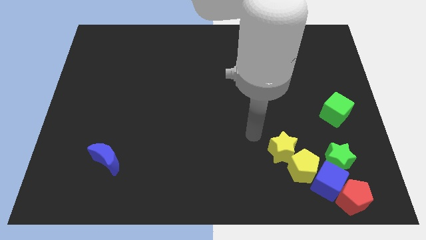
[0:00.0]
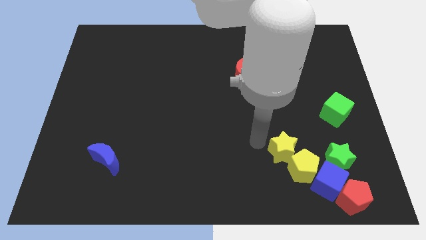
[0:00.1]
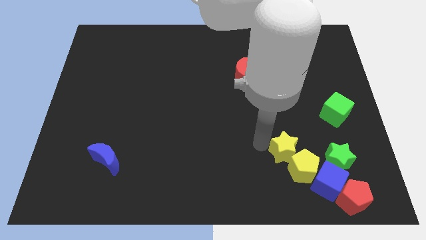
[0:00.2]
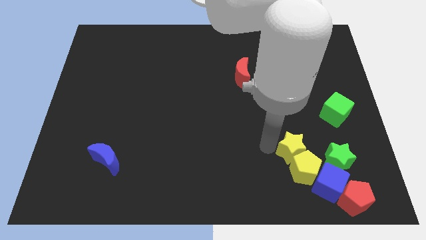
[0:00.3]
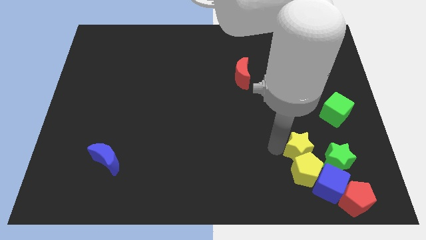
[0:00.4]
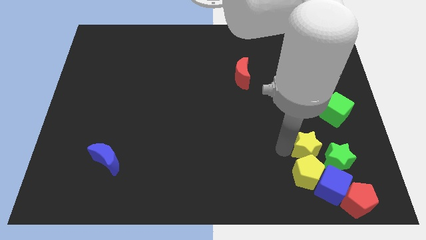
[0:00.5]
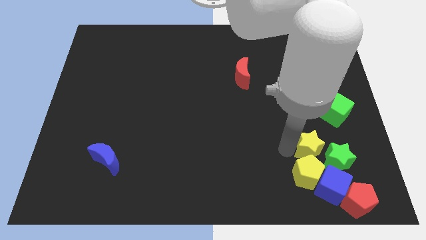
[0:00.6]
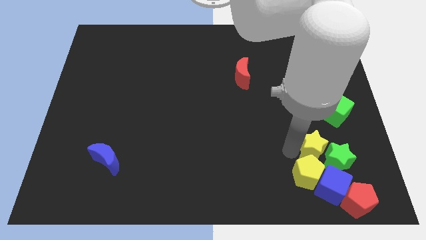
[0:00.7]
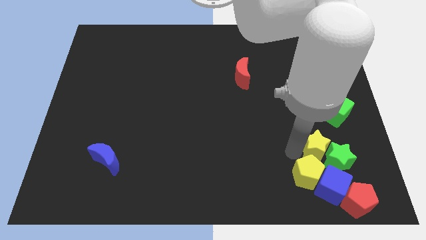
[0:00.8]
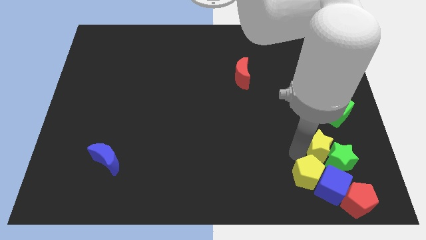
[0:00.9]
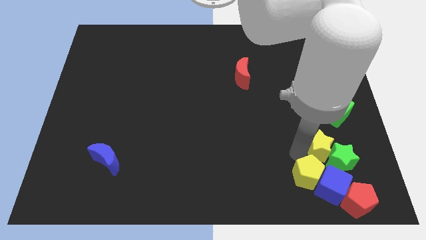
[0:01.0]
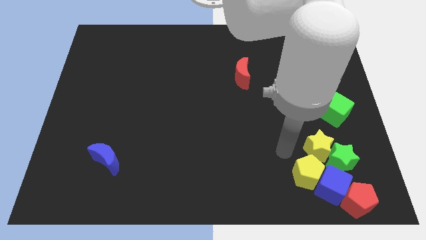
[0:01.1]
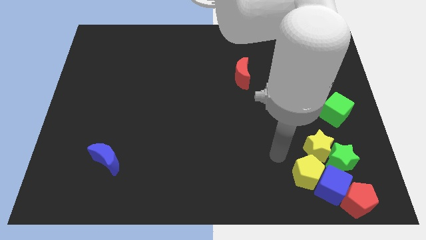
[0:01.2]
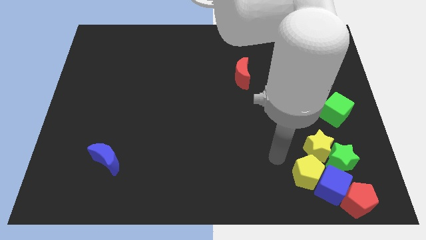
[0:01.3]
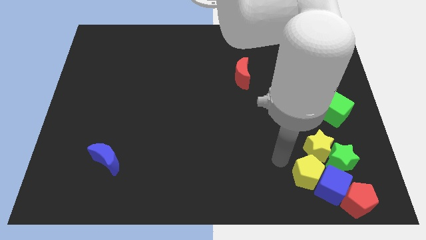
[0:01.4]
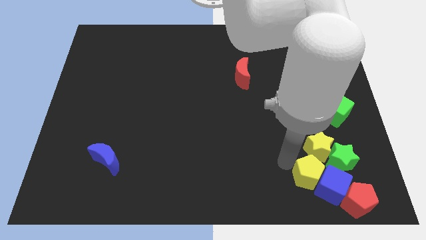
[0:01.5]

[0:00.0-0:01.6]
move the yellow star diagonally above to the green star

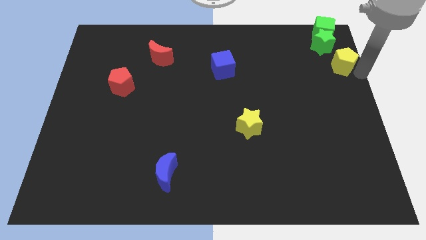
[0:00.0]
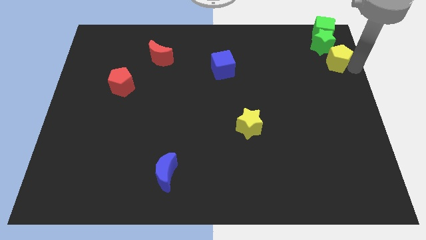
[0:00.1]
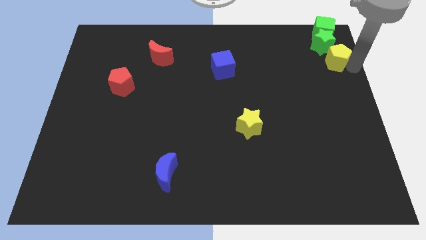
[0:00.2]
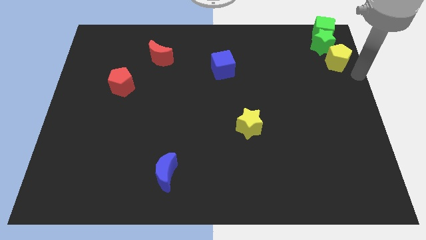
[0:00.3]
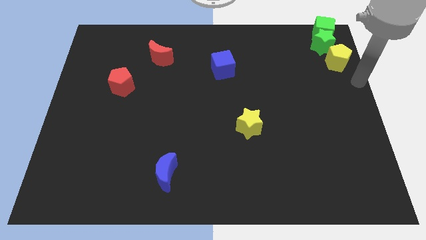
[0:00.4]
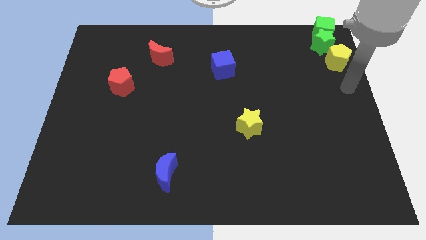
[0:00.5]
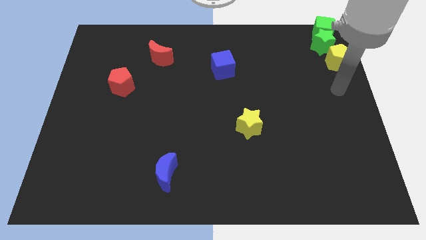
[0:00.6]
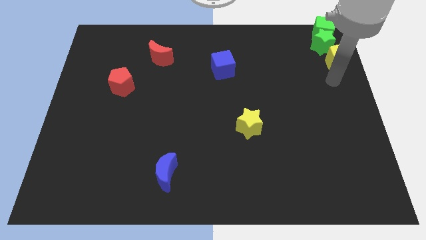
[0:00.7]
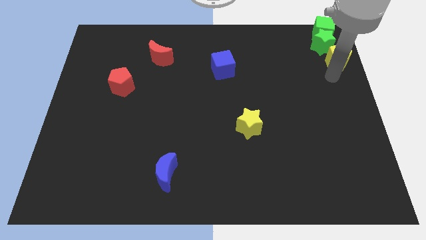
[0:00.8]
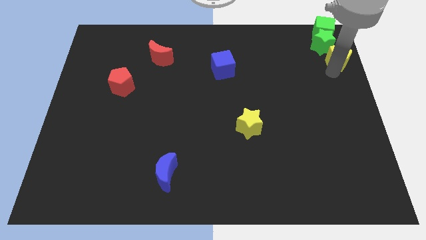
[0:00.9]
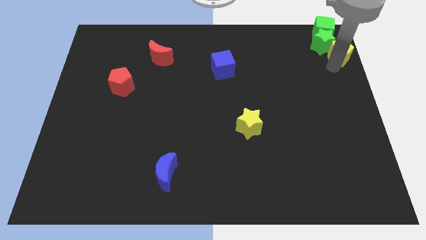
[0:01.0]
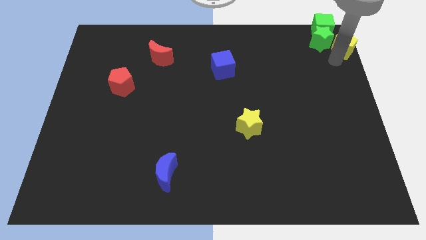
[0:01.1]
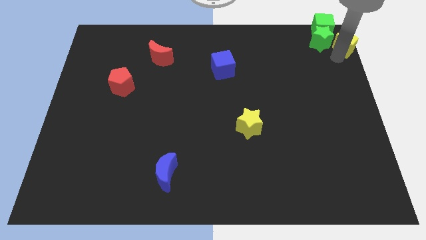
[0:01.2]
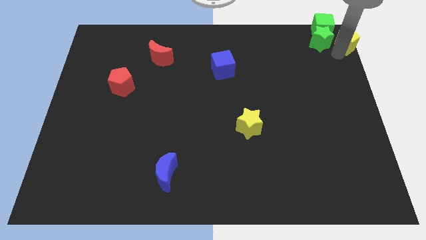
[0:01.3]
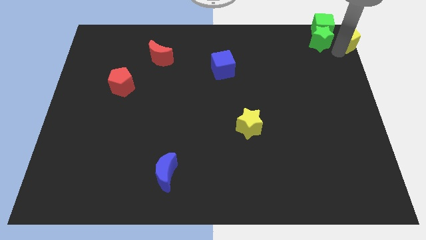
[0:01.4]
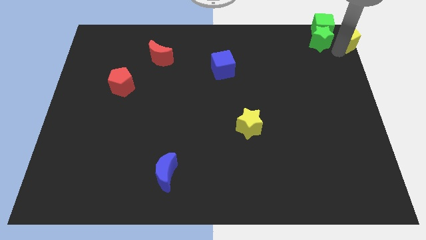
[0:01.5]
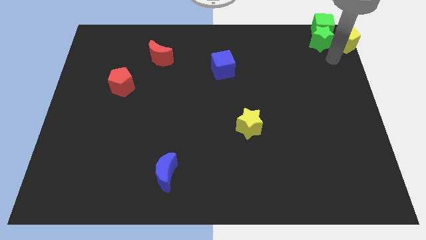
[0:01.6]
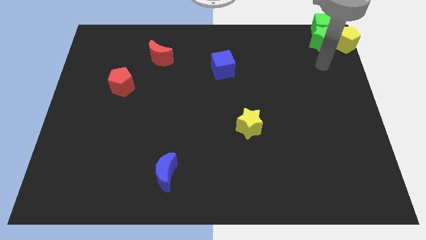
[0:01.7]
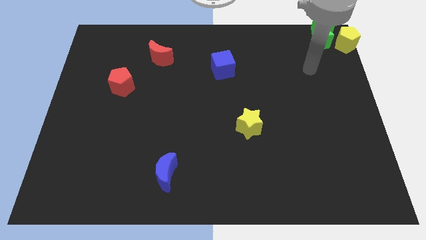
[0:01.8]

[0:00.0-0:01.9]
move the yellow pentagon right side of the green star

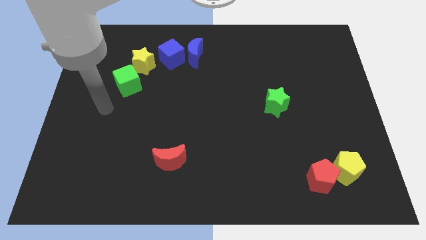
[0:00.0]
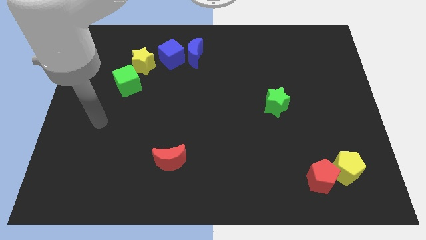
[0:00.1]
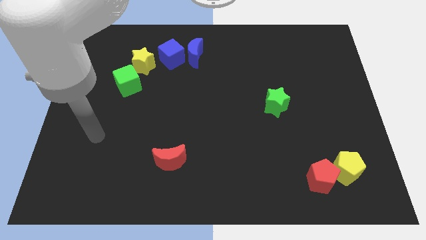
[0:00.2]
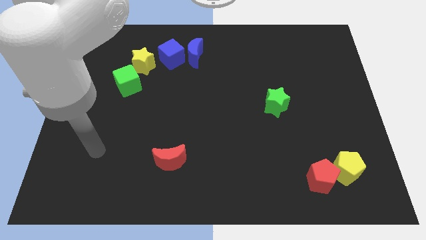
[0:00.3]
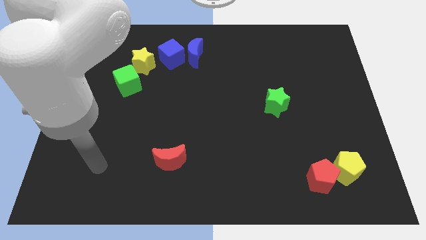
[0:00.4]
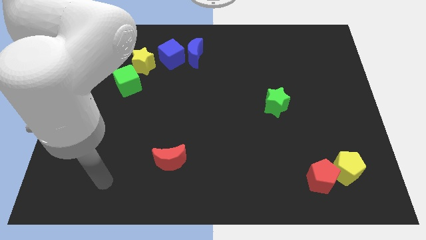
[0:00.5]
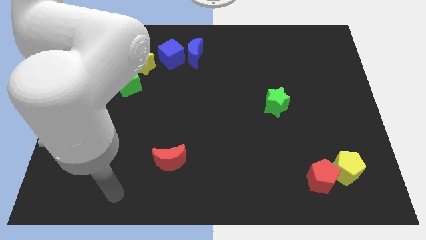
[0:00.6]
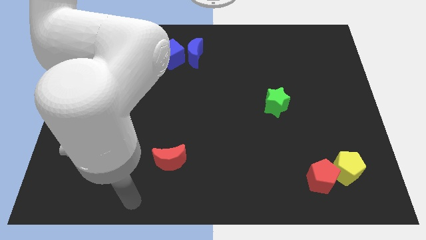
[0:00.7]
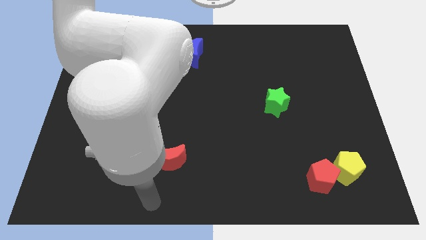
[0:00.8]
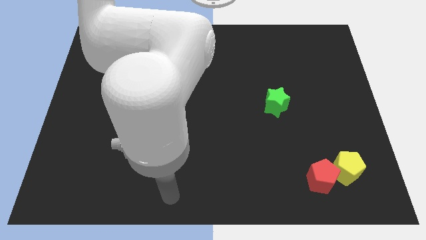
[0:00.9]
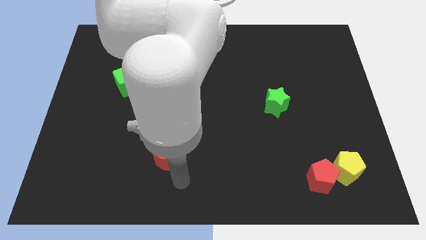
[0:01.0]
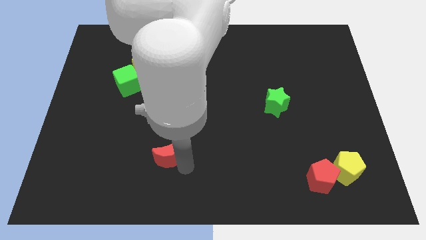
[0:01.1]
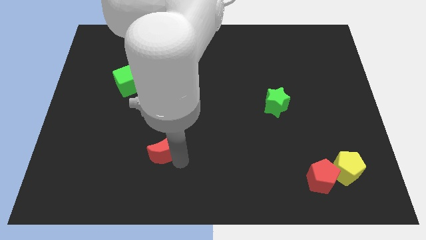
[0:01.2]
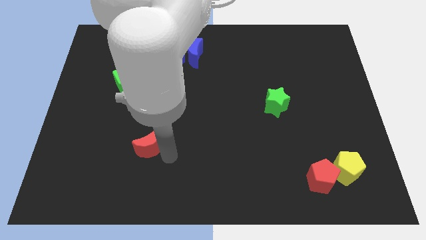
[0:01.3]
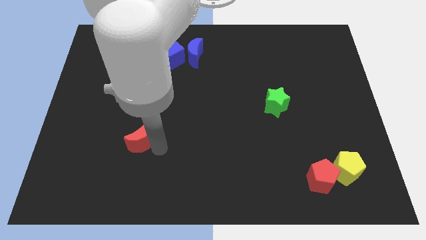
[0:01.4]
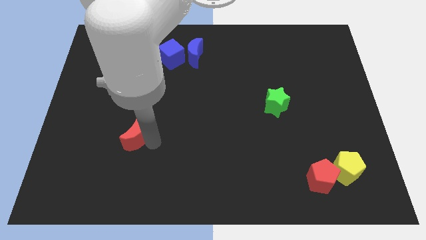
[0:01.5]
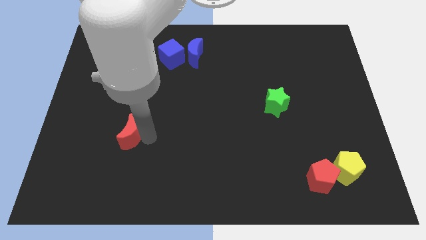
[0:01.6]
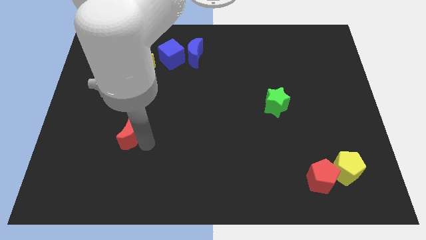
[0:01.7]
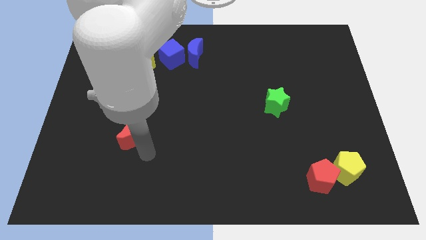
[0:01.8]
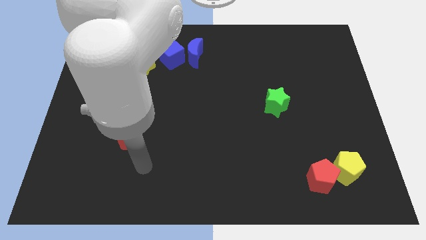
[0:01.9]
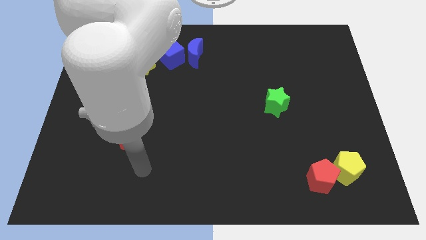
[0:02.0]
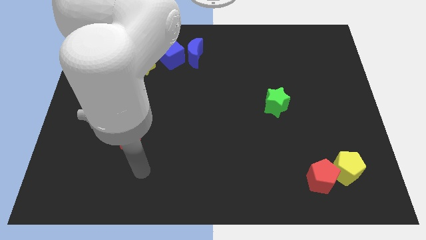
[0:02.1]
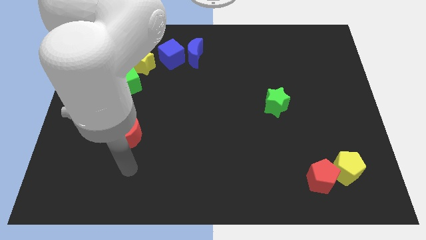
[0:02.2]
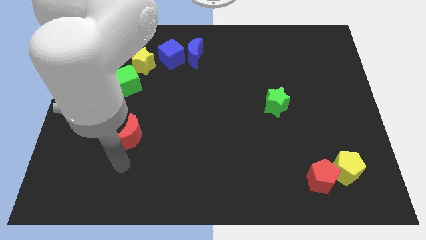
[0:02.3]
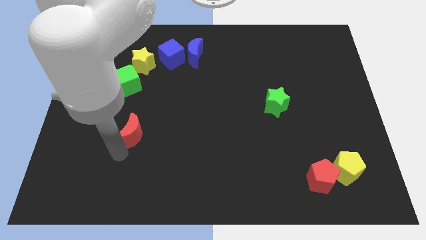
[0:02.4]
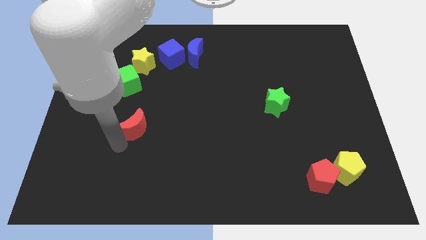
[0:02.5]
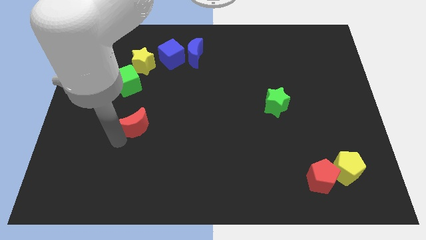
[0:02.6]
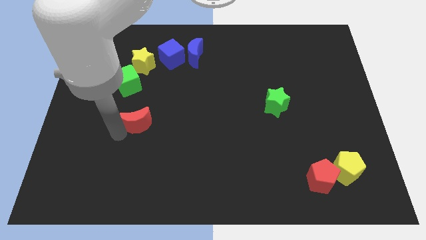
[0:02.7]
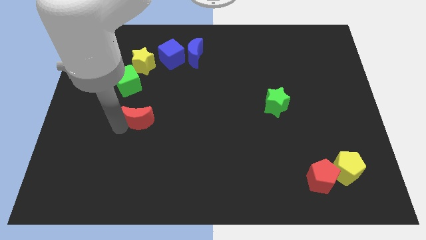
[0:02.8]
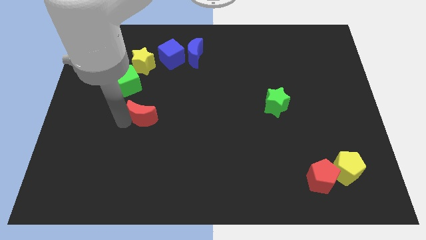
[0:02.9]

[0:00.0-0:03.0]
push the red crescent to the bottom of the green cube

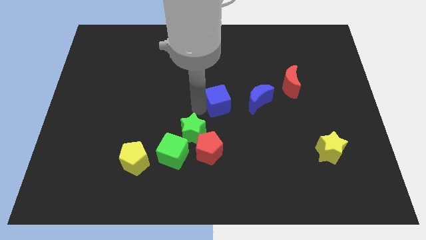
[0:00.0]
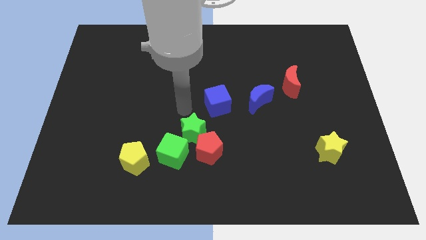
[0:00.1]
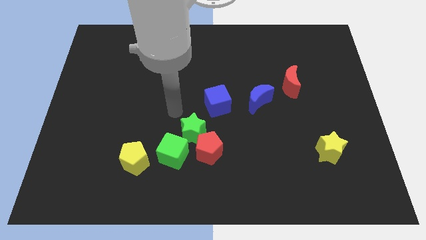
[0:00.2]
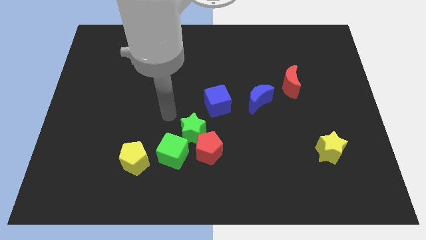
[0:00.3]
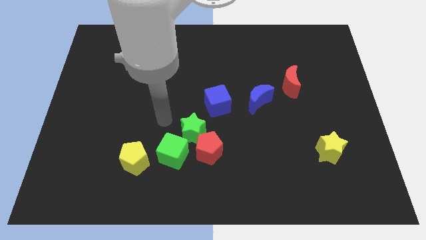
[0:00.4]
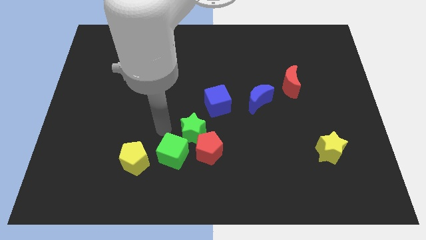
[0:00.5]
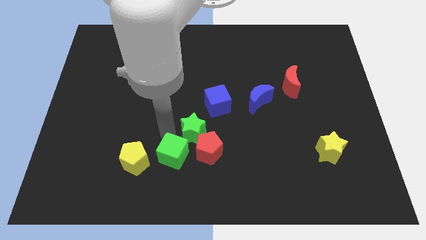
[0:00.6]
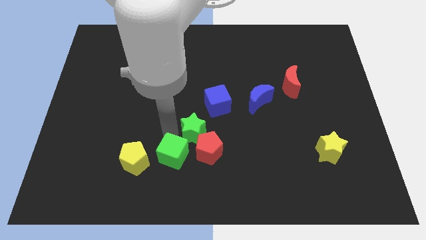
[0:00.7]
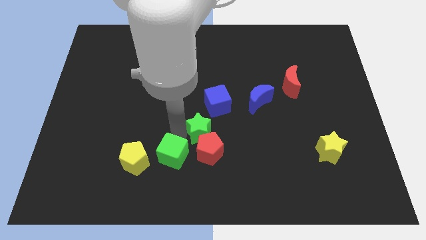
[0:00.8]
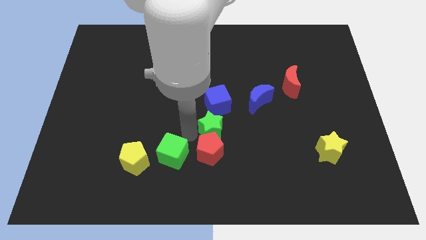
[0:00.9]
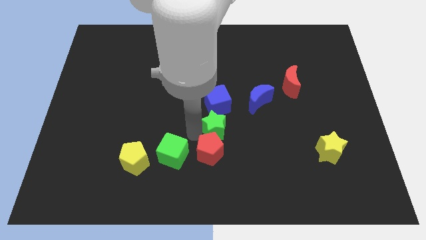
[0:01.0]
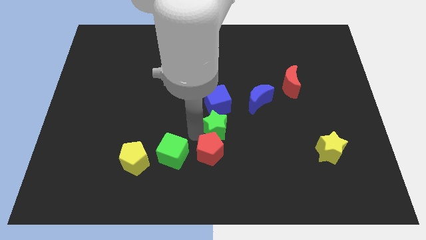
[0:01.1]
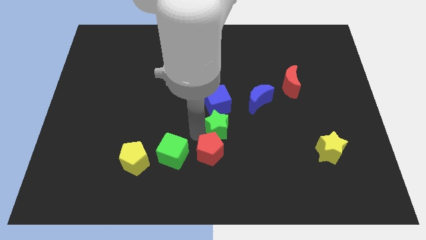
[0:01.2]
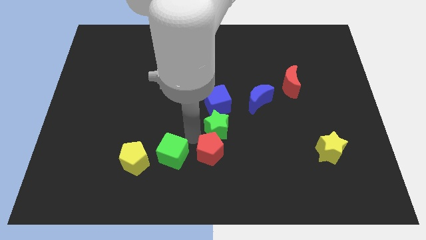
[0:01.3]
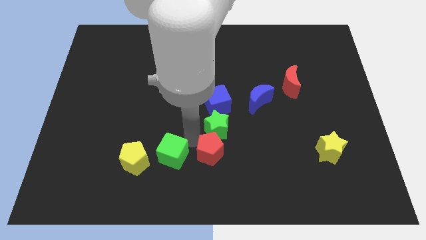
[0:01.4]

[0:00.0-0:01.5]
place green star in between blue cube and red pentagon

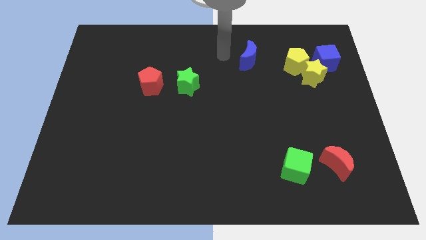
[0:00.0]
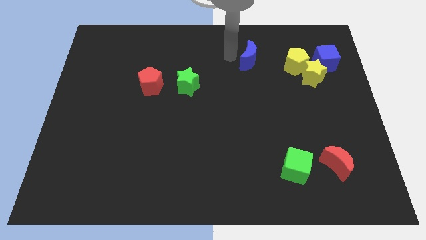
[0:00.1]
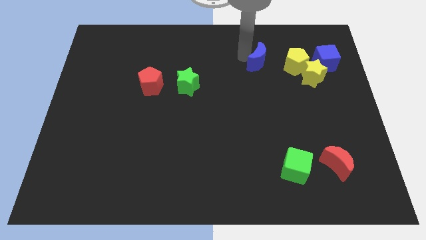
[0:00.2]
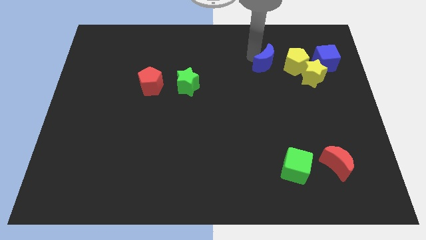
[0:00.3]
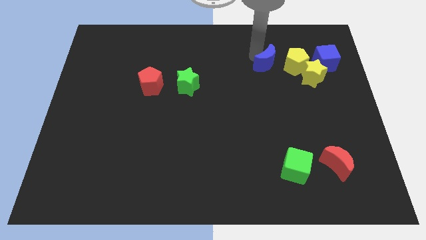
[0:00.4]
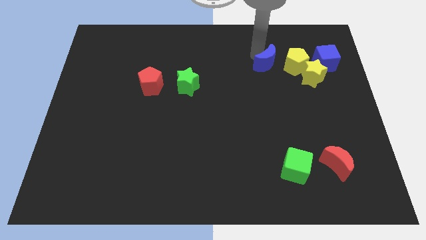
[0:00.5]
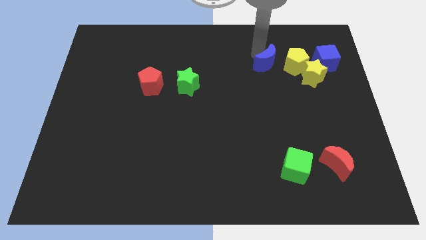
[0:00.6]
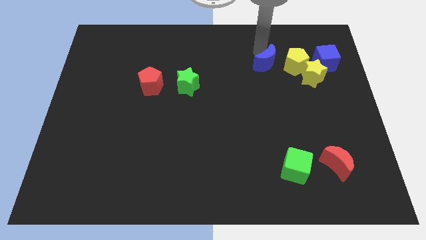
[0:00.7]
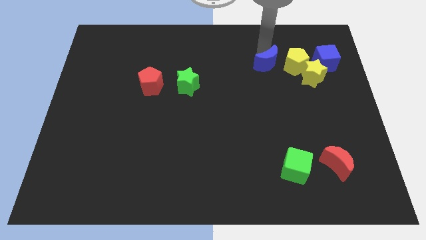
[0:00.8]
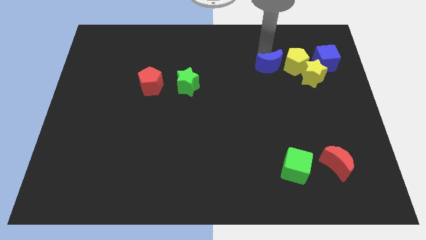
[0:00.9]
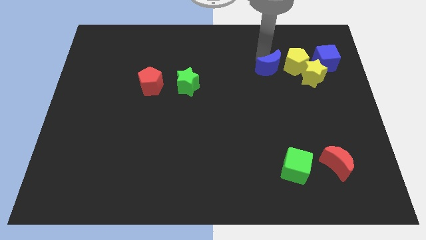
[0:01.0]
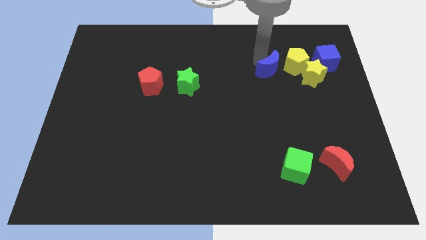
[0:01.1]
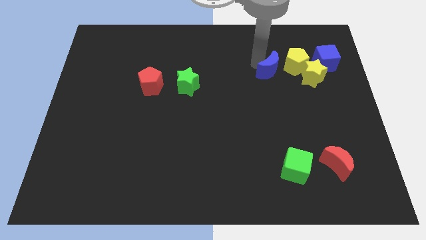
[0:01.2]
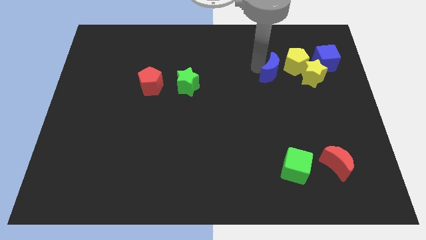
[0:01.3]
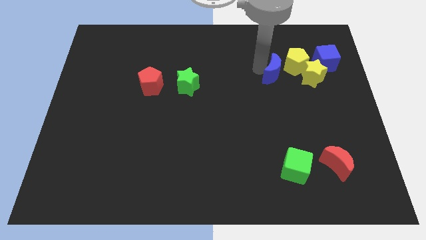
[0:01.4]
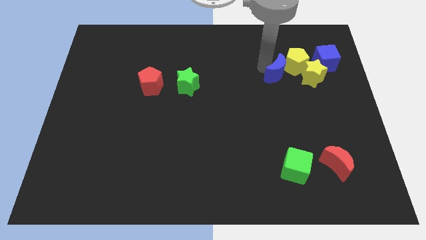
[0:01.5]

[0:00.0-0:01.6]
push the blue crescent closer to the yellow pentagon
